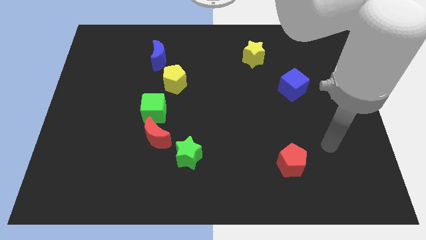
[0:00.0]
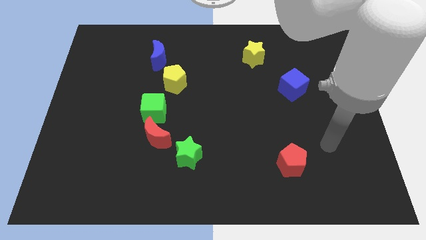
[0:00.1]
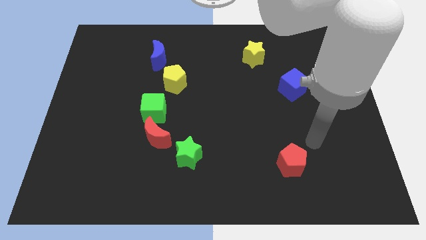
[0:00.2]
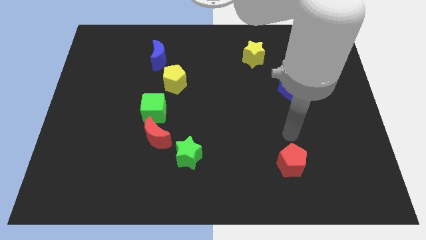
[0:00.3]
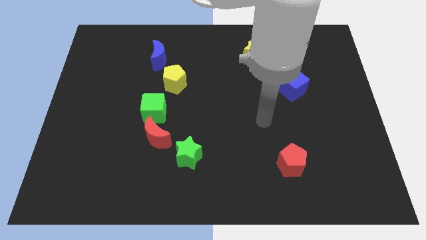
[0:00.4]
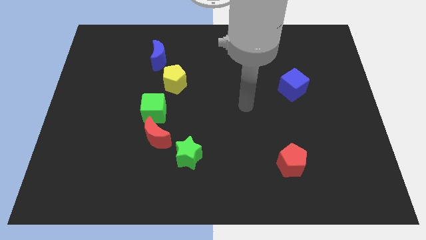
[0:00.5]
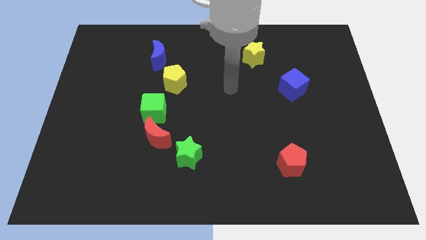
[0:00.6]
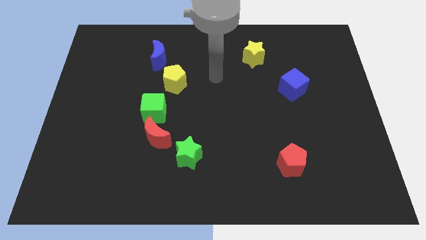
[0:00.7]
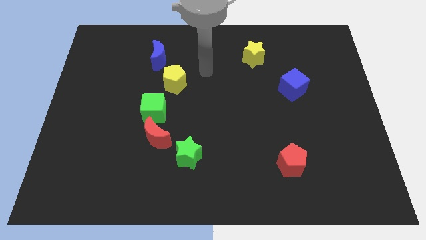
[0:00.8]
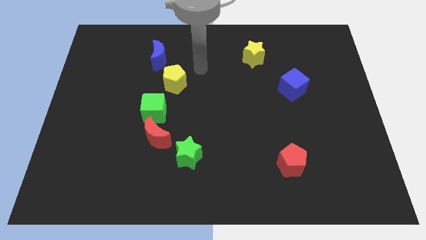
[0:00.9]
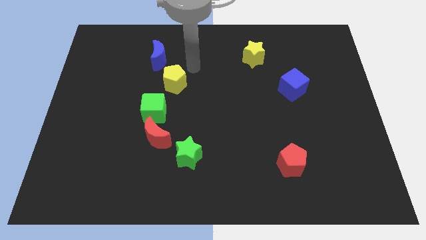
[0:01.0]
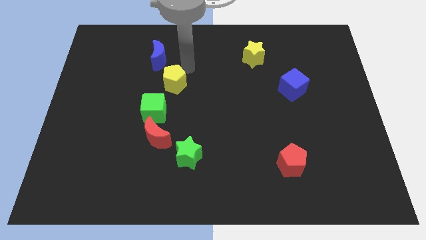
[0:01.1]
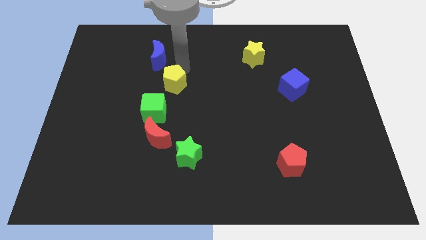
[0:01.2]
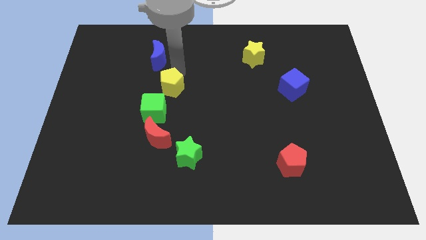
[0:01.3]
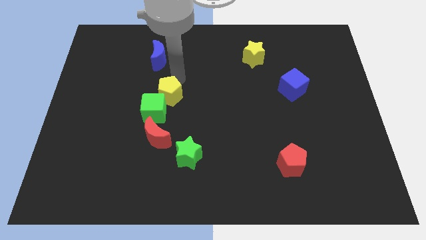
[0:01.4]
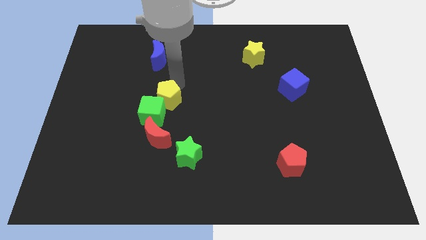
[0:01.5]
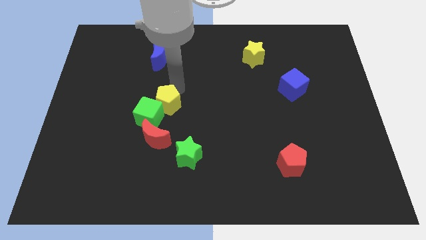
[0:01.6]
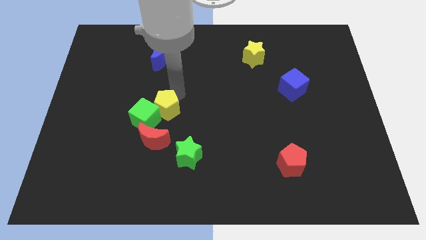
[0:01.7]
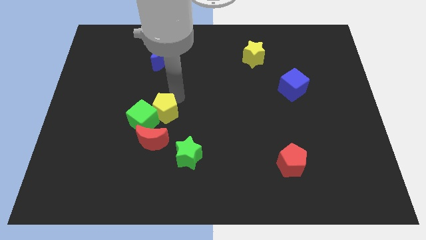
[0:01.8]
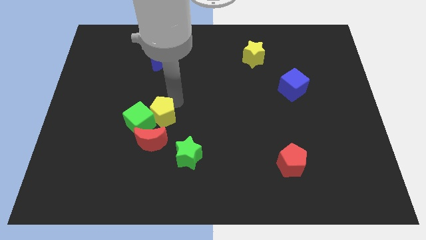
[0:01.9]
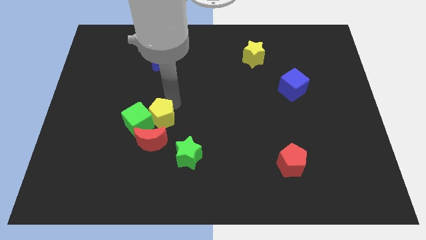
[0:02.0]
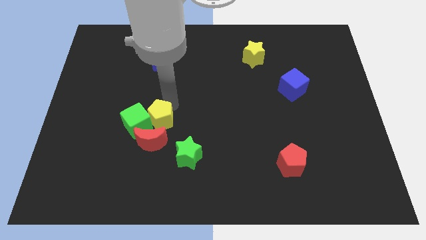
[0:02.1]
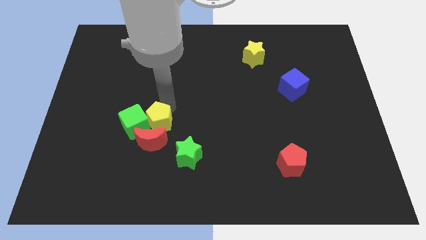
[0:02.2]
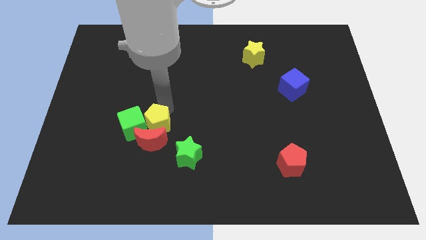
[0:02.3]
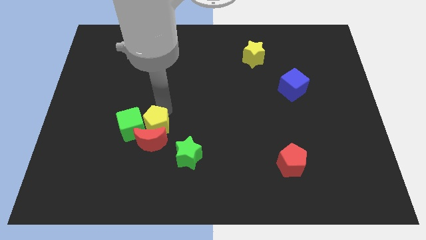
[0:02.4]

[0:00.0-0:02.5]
move the yellow pentagon next to the red moon

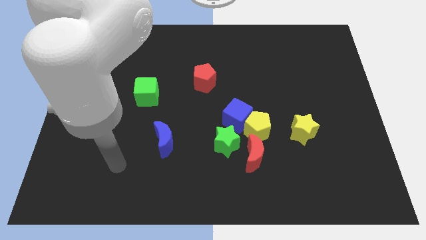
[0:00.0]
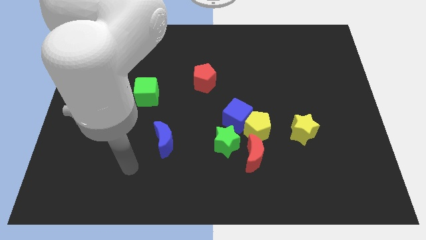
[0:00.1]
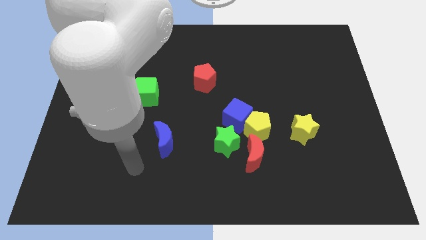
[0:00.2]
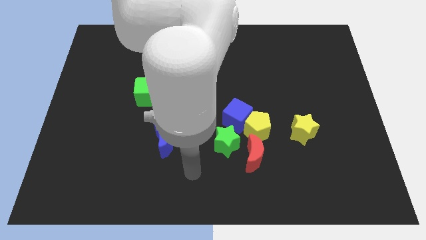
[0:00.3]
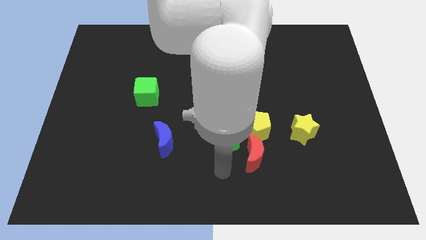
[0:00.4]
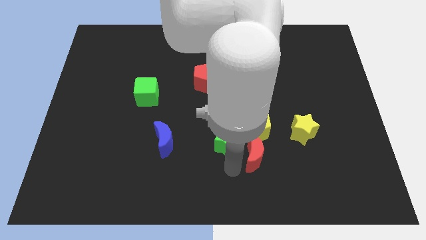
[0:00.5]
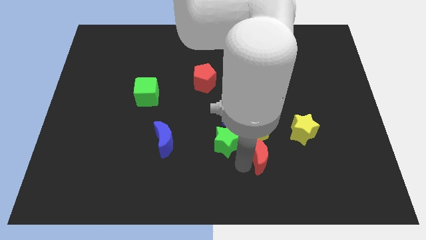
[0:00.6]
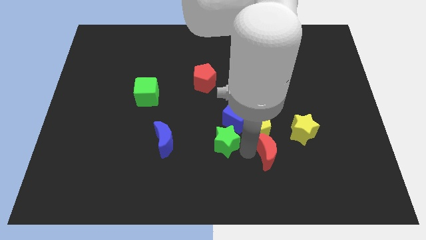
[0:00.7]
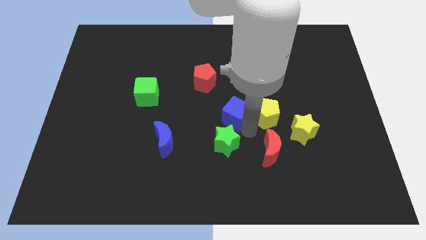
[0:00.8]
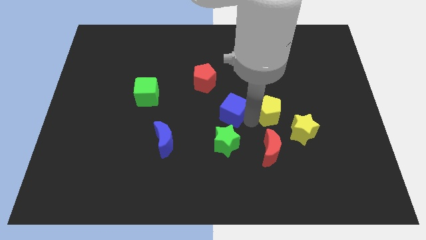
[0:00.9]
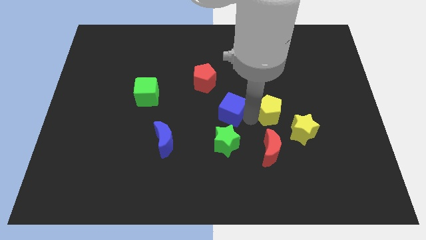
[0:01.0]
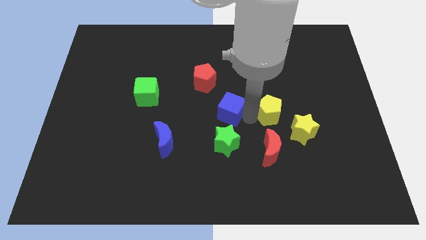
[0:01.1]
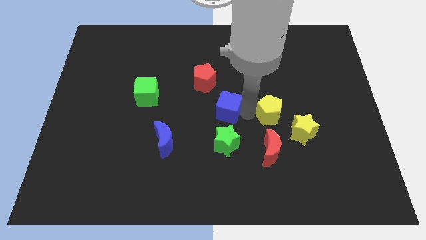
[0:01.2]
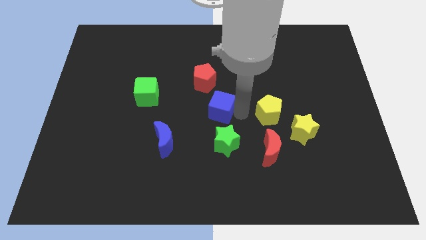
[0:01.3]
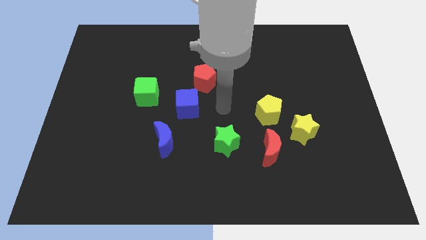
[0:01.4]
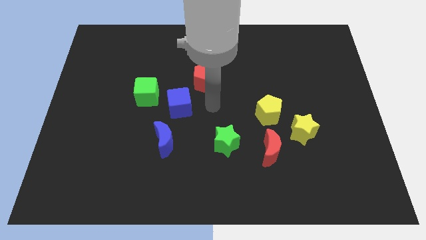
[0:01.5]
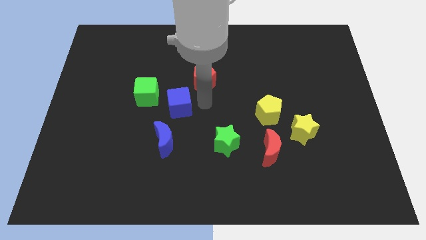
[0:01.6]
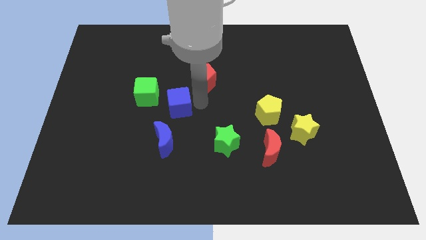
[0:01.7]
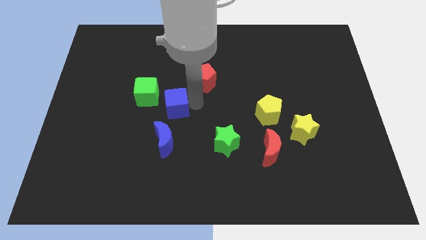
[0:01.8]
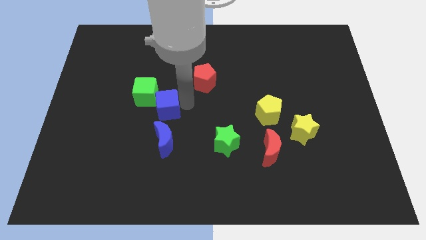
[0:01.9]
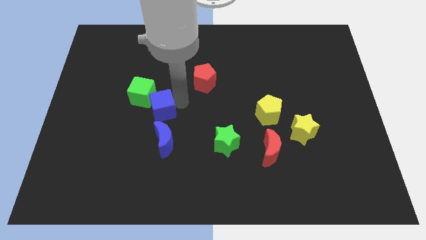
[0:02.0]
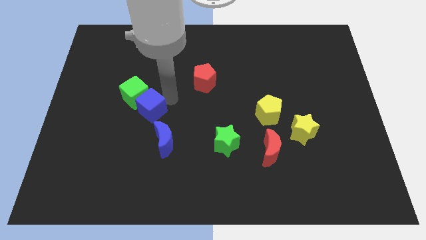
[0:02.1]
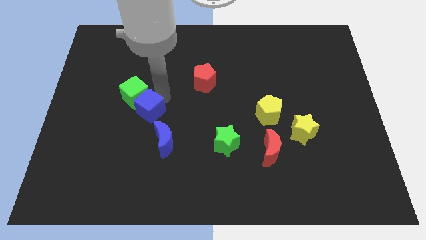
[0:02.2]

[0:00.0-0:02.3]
slide the blue cube next to the green cube

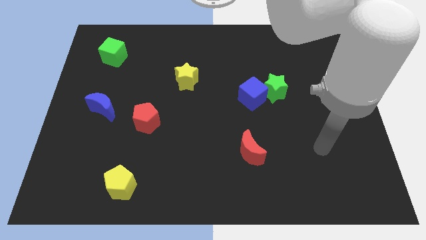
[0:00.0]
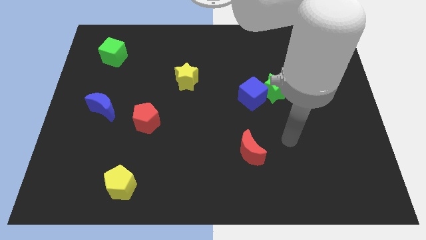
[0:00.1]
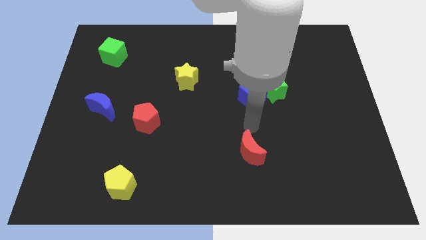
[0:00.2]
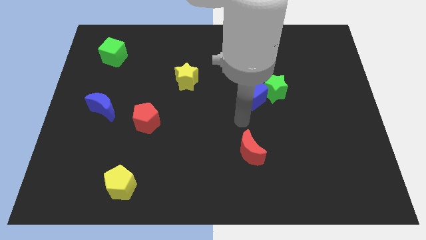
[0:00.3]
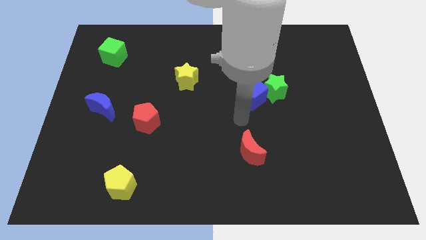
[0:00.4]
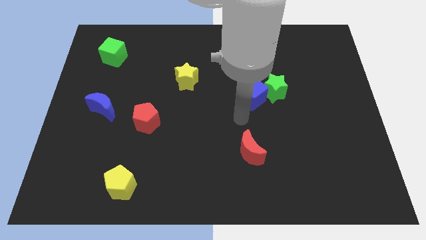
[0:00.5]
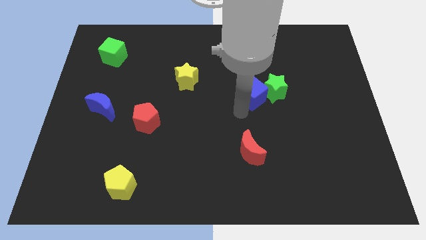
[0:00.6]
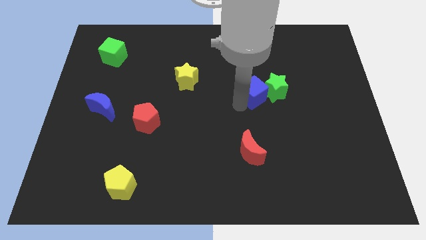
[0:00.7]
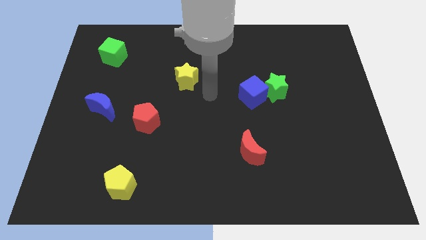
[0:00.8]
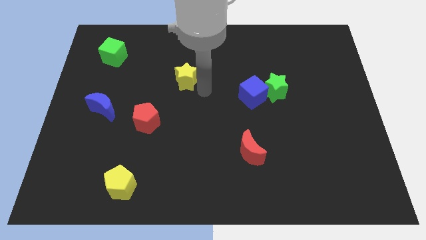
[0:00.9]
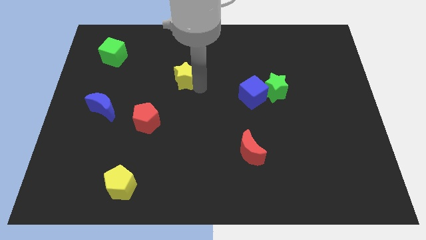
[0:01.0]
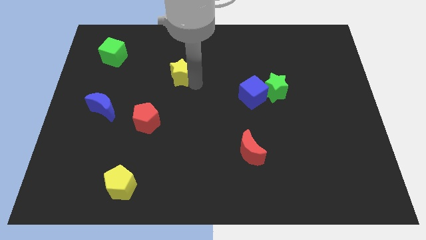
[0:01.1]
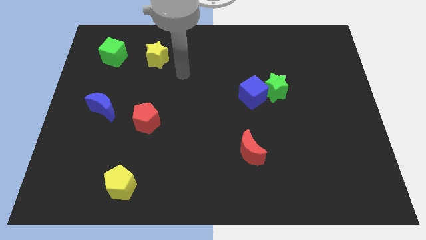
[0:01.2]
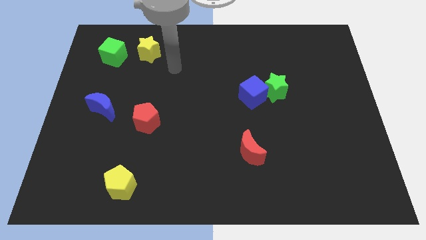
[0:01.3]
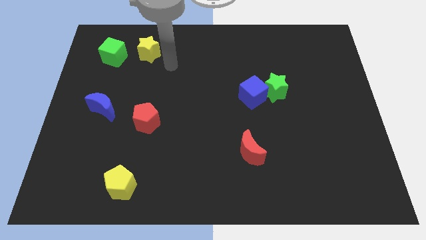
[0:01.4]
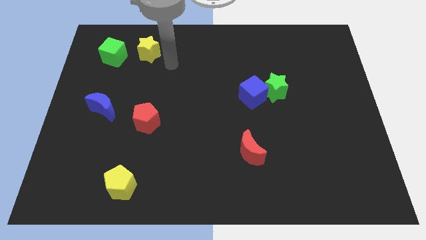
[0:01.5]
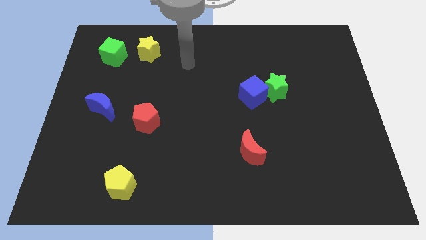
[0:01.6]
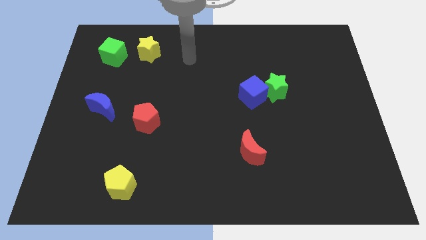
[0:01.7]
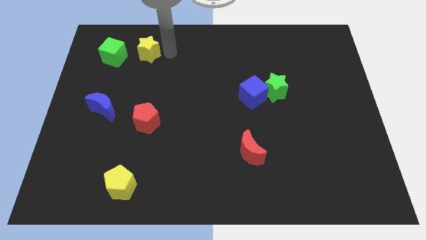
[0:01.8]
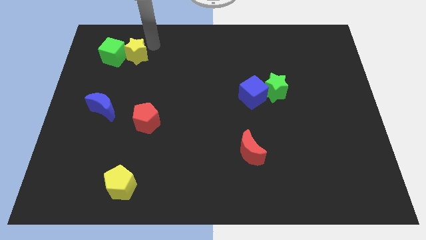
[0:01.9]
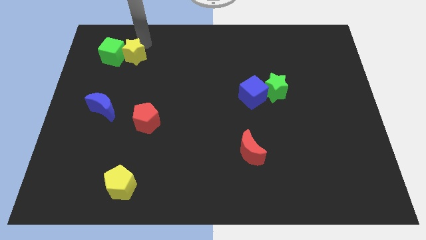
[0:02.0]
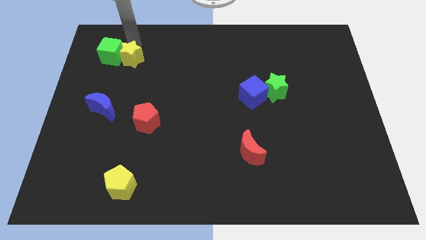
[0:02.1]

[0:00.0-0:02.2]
put the yellow star towards the green cube

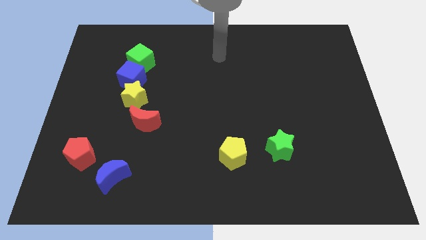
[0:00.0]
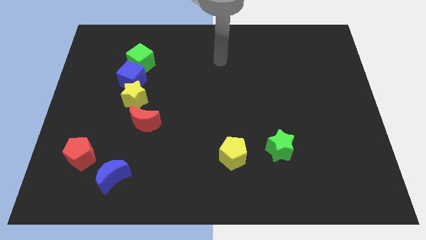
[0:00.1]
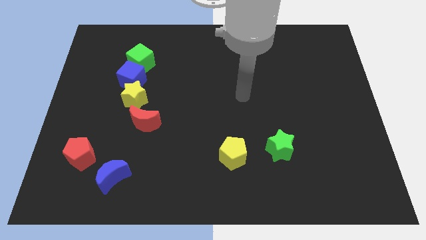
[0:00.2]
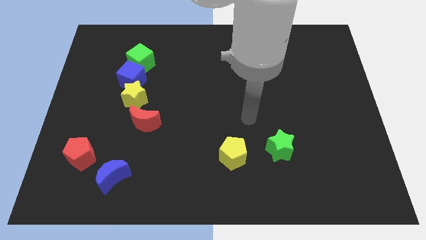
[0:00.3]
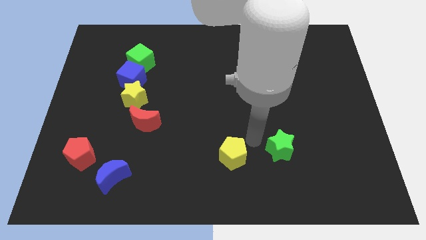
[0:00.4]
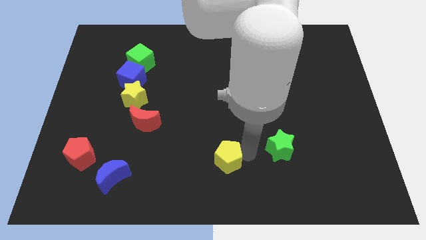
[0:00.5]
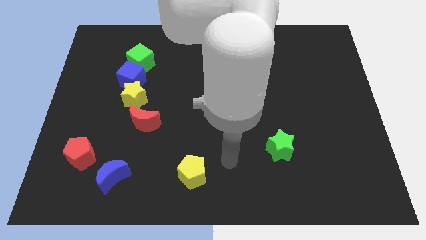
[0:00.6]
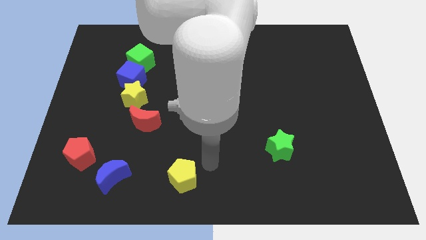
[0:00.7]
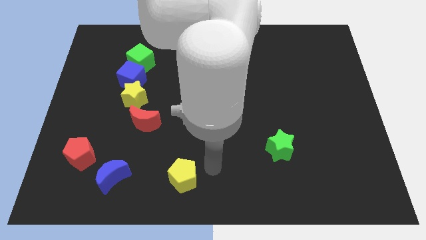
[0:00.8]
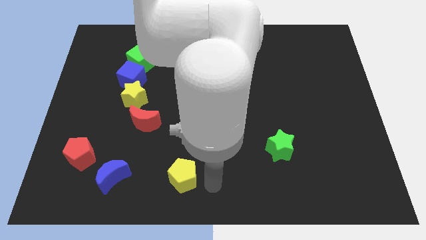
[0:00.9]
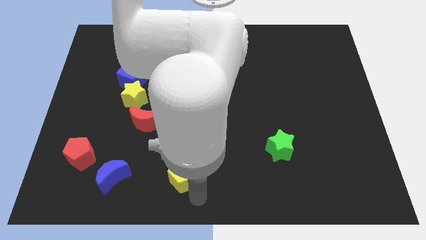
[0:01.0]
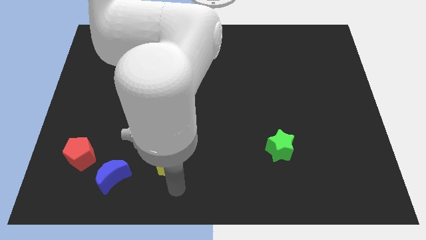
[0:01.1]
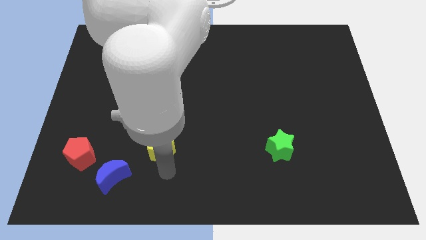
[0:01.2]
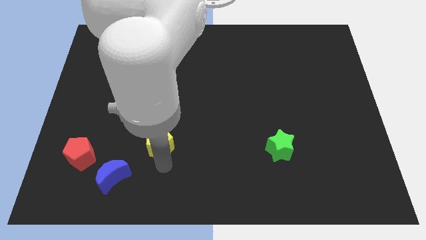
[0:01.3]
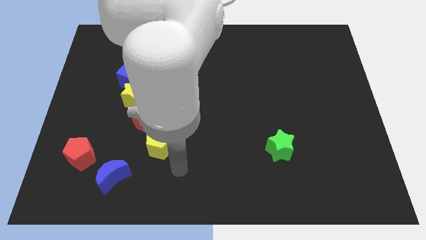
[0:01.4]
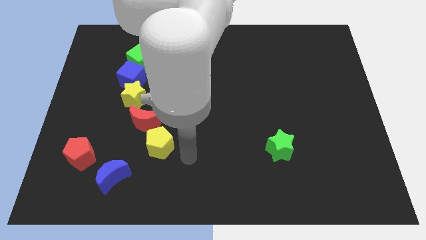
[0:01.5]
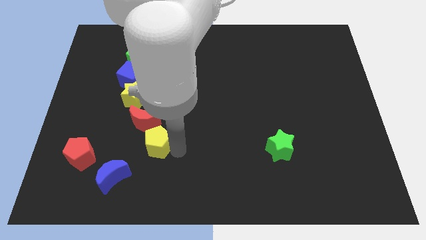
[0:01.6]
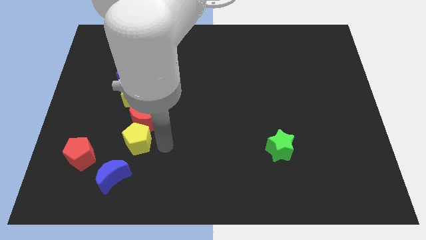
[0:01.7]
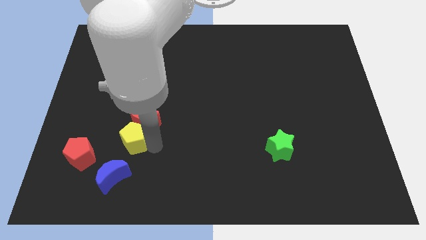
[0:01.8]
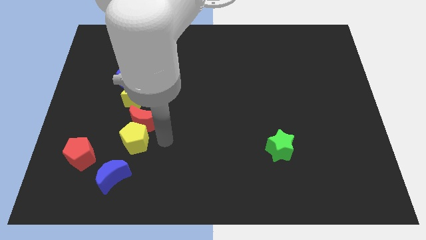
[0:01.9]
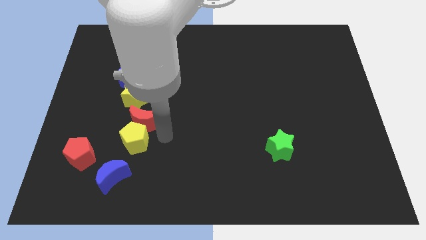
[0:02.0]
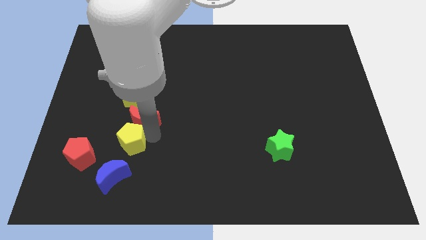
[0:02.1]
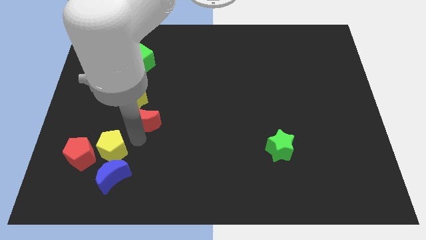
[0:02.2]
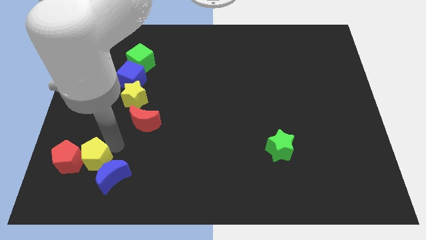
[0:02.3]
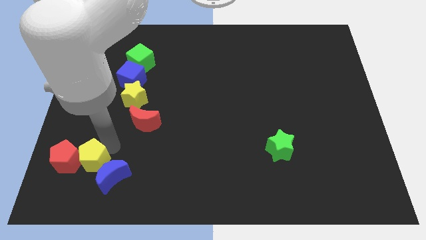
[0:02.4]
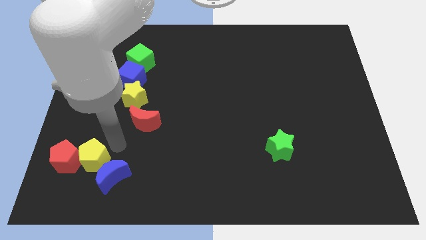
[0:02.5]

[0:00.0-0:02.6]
put the yellow pentagon close to the red pentagon
